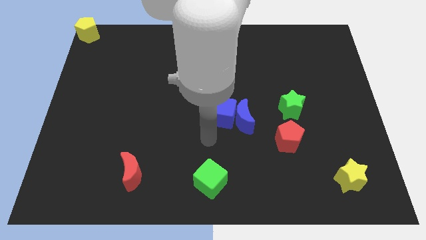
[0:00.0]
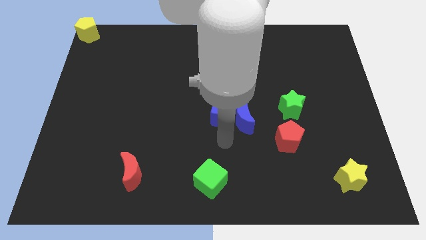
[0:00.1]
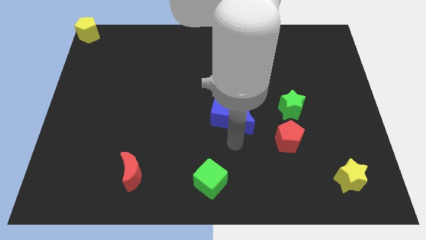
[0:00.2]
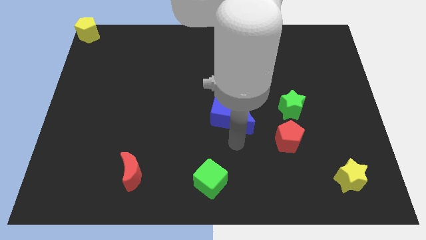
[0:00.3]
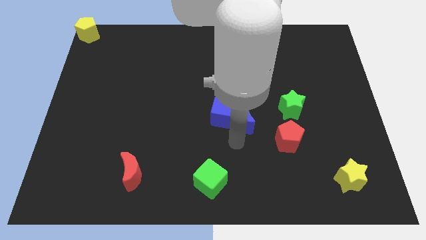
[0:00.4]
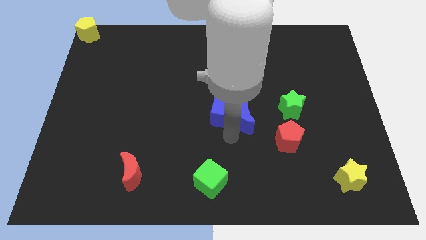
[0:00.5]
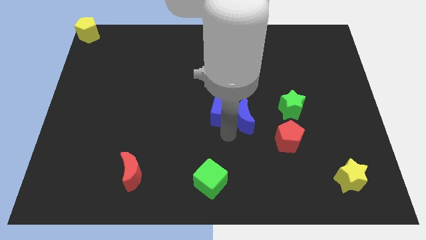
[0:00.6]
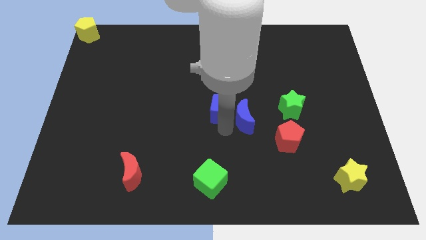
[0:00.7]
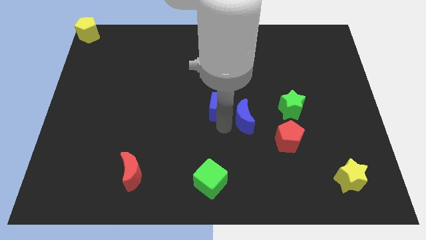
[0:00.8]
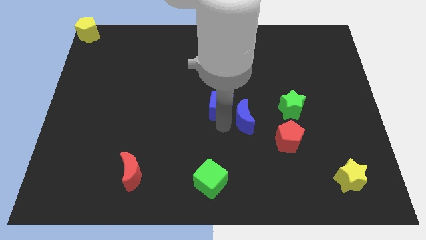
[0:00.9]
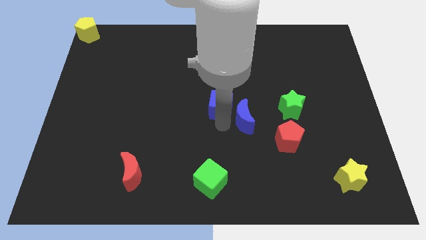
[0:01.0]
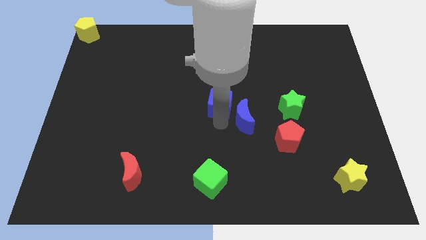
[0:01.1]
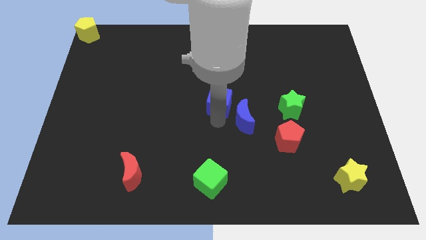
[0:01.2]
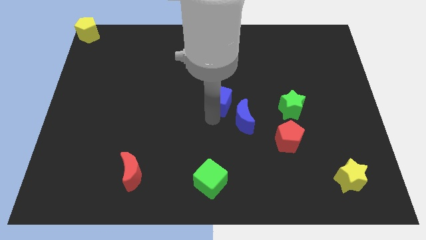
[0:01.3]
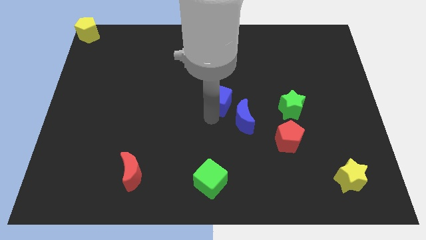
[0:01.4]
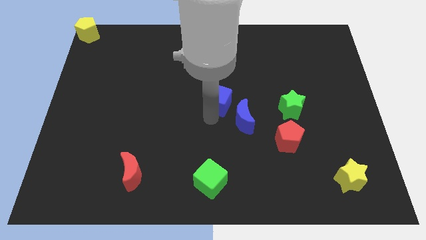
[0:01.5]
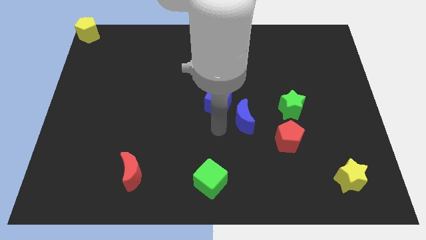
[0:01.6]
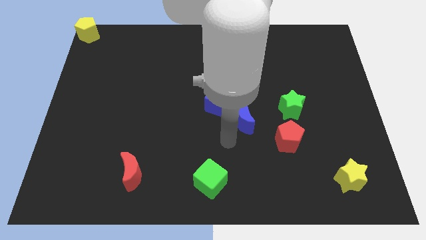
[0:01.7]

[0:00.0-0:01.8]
separate blue cube from the blue moon

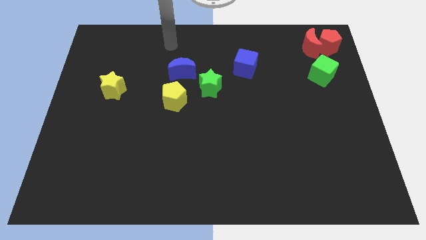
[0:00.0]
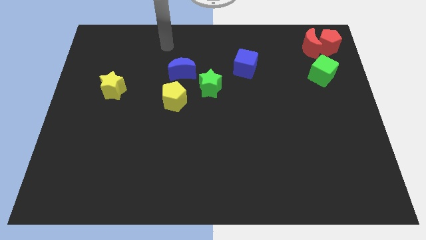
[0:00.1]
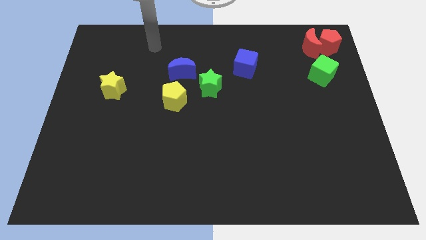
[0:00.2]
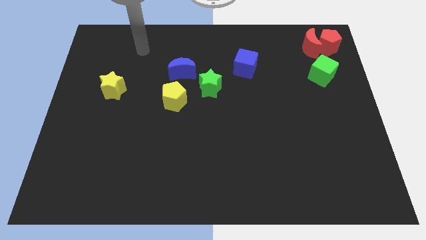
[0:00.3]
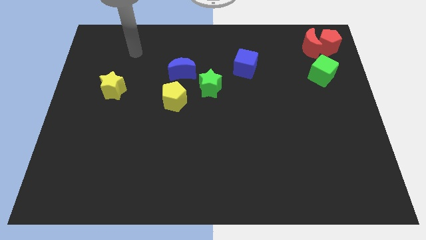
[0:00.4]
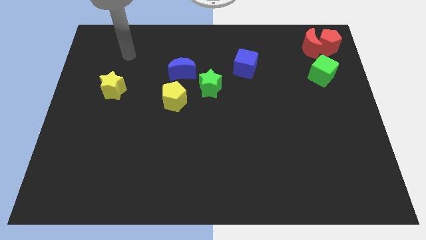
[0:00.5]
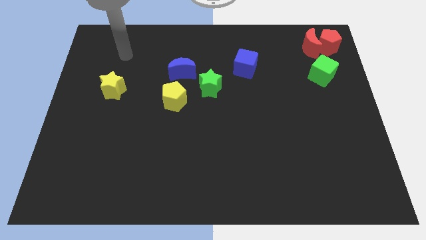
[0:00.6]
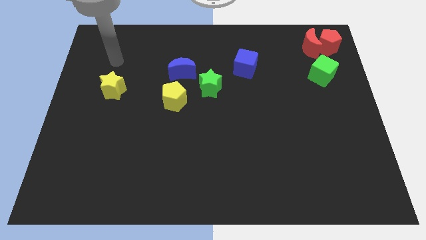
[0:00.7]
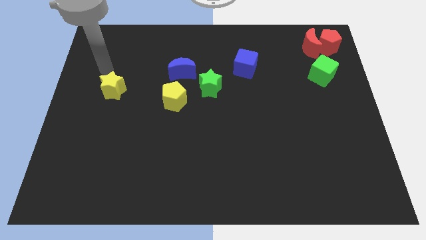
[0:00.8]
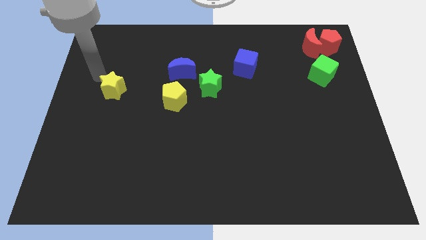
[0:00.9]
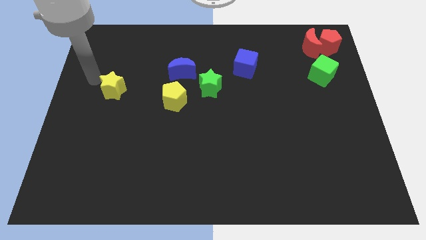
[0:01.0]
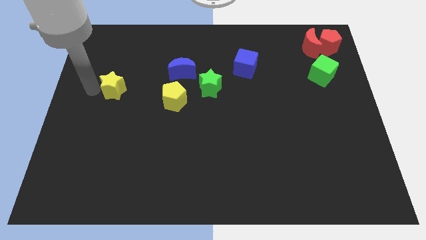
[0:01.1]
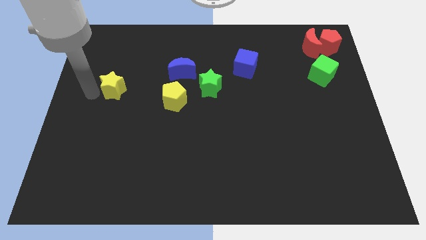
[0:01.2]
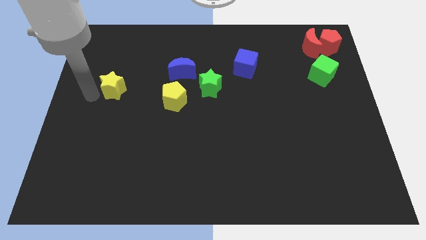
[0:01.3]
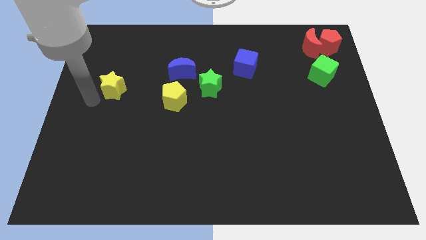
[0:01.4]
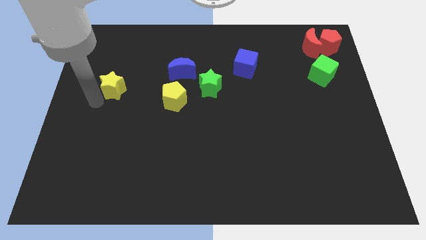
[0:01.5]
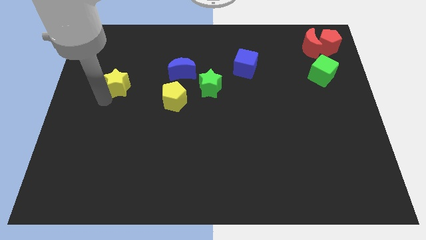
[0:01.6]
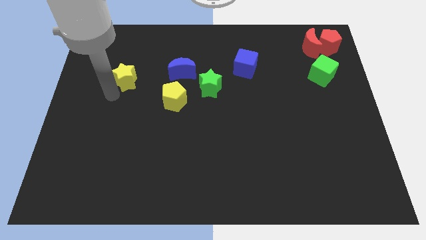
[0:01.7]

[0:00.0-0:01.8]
place your arm below to the yellow star

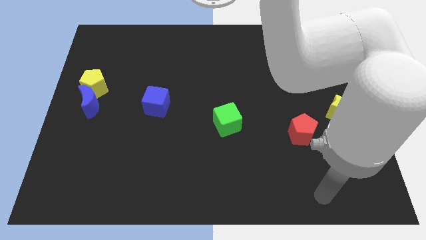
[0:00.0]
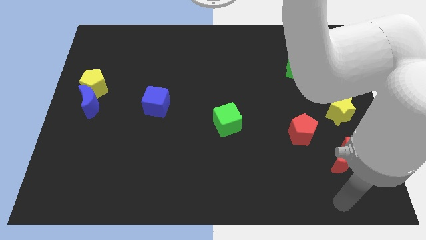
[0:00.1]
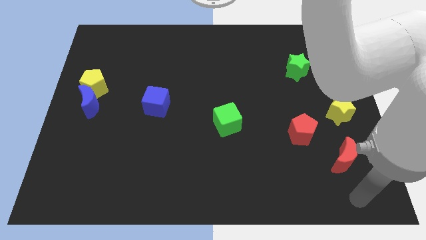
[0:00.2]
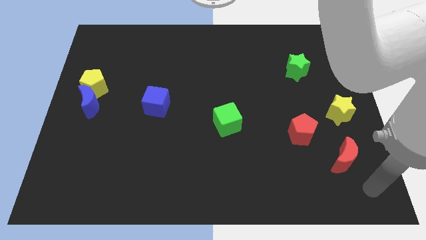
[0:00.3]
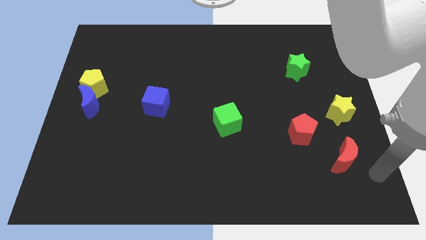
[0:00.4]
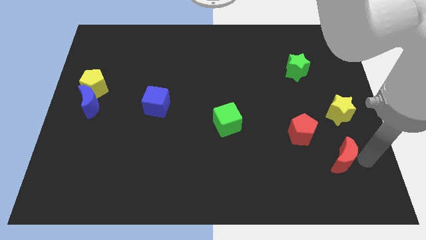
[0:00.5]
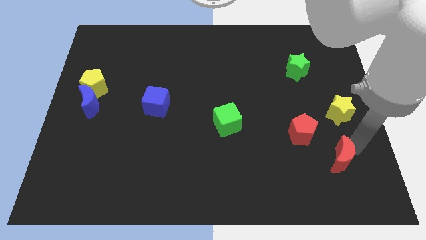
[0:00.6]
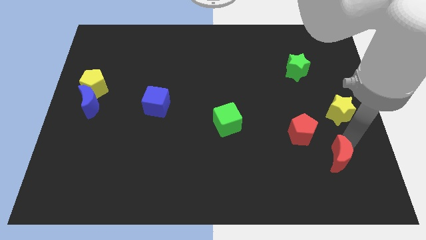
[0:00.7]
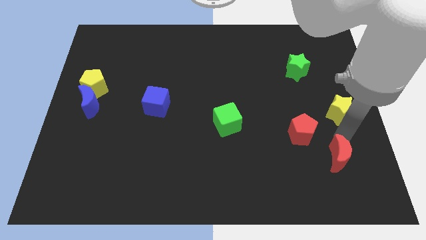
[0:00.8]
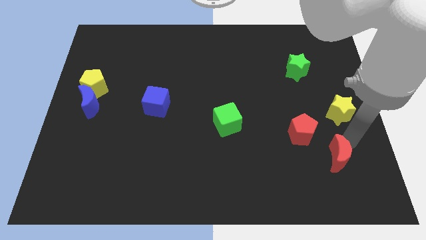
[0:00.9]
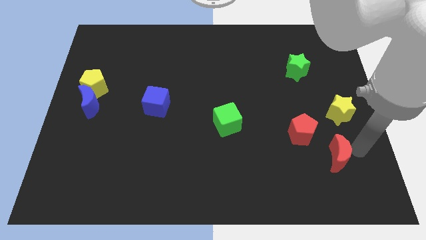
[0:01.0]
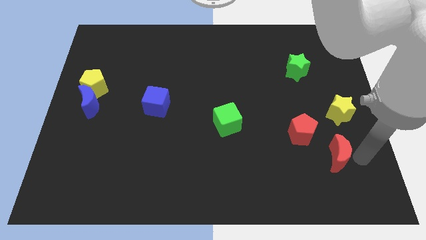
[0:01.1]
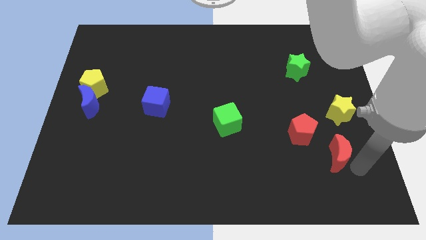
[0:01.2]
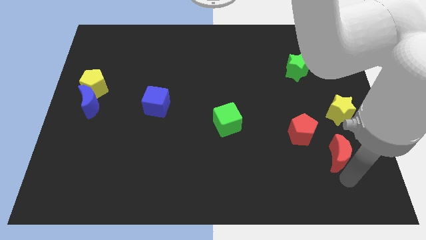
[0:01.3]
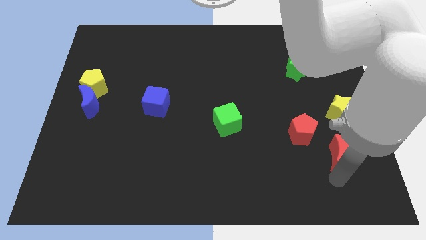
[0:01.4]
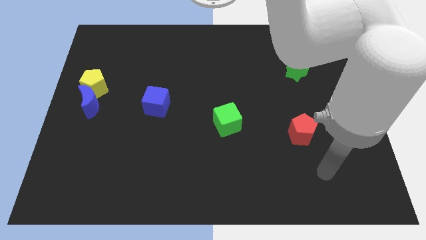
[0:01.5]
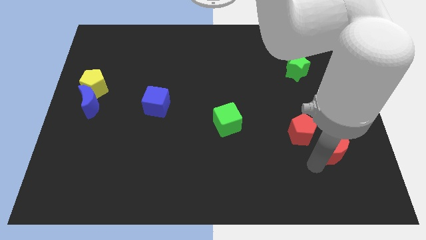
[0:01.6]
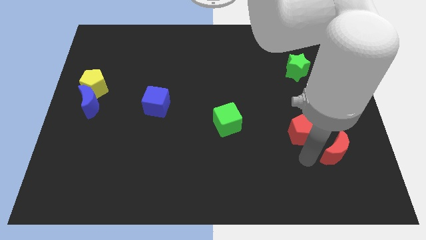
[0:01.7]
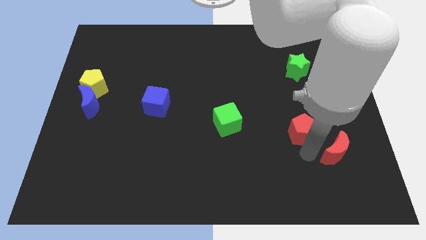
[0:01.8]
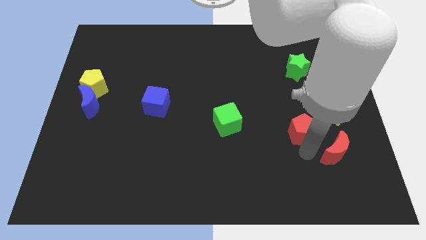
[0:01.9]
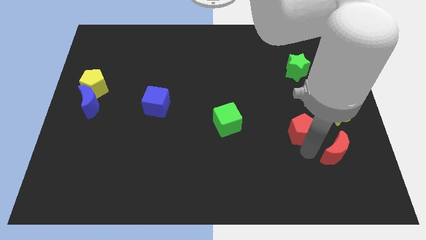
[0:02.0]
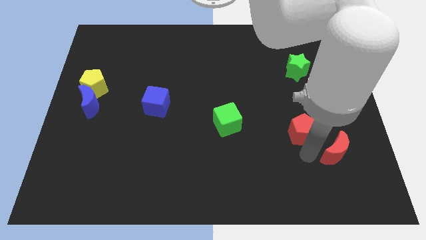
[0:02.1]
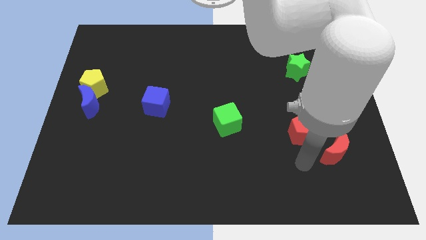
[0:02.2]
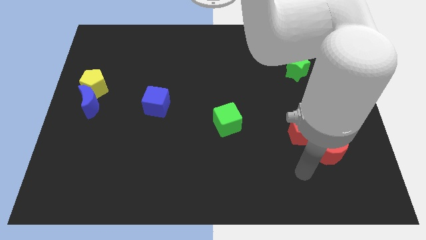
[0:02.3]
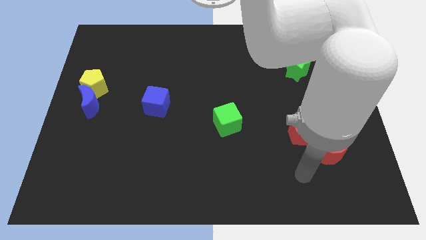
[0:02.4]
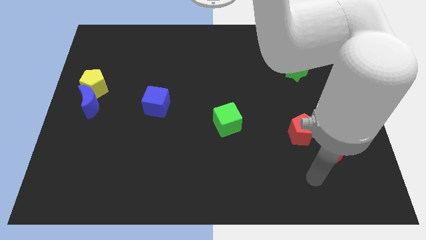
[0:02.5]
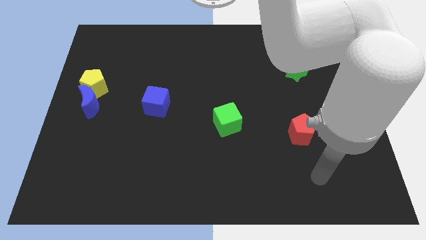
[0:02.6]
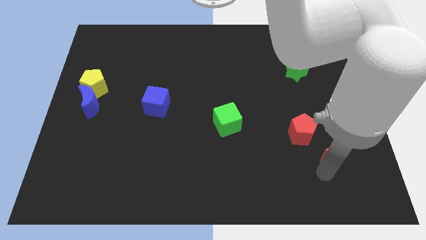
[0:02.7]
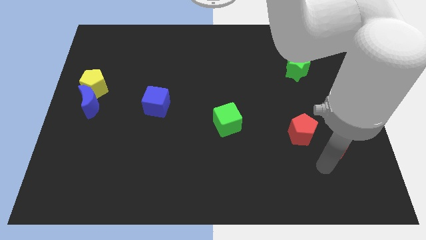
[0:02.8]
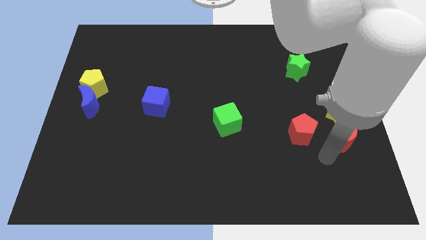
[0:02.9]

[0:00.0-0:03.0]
place the red moon close to the yellow star

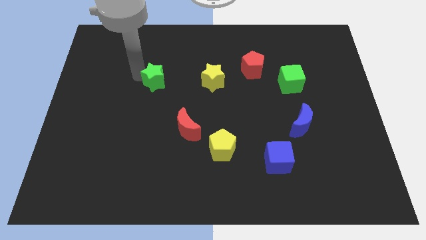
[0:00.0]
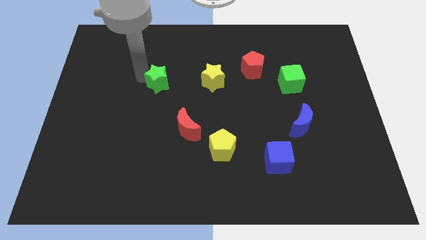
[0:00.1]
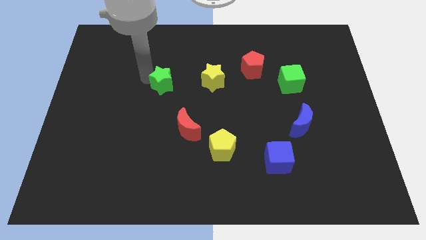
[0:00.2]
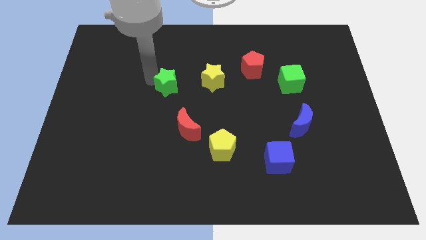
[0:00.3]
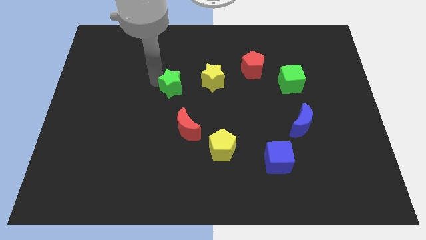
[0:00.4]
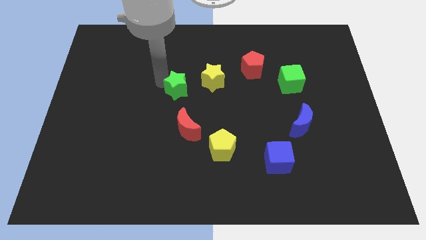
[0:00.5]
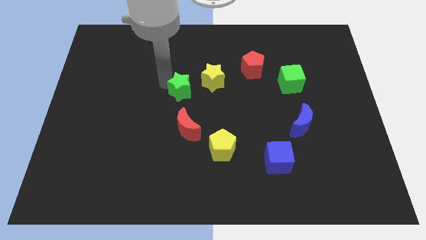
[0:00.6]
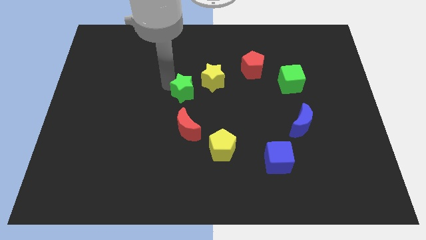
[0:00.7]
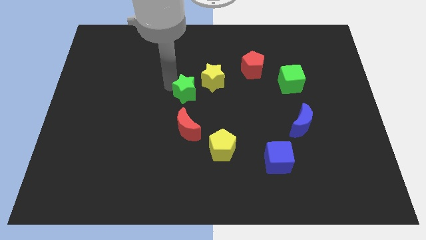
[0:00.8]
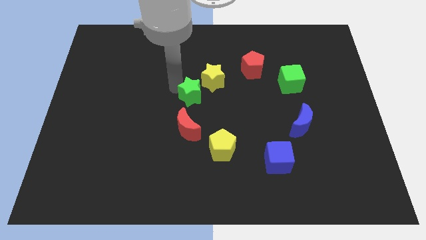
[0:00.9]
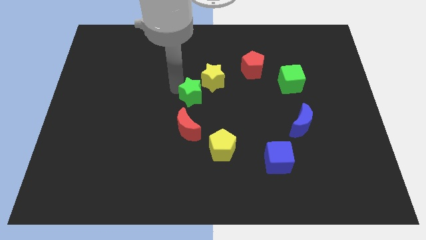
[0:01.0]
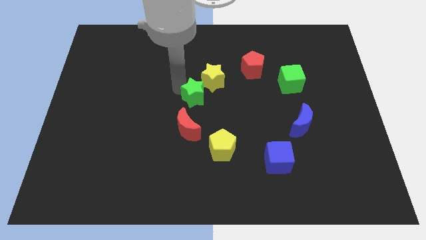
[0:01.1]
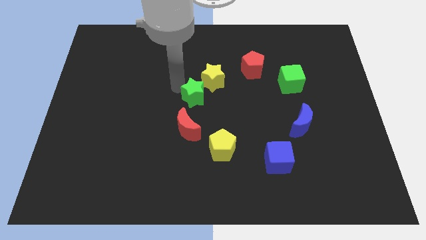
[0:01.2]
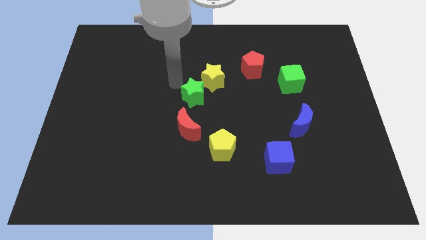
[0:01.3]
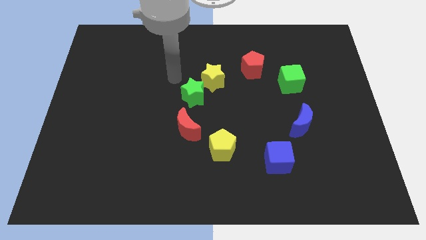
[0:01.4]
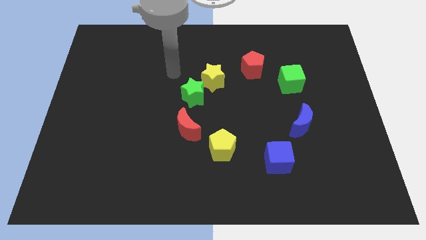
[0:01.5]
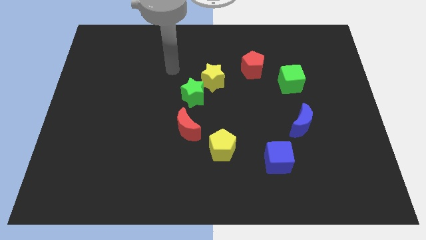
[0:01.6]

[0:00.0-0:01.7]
push the green star to the bottom left diagonal of the yellow star

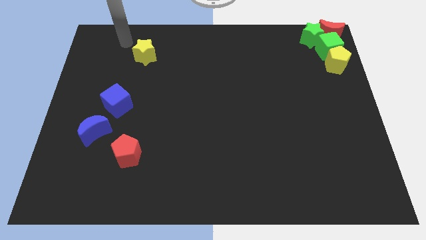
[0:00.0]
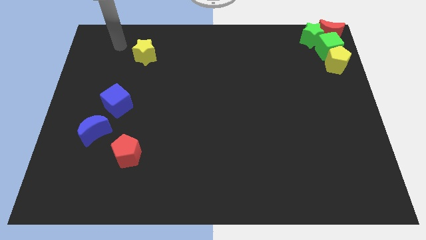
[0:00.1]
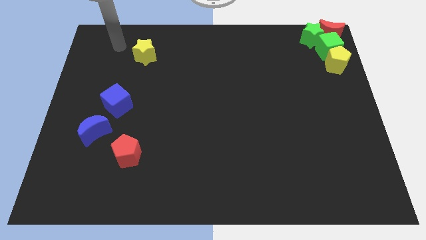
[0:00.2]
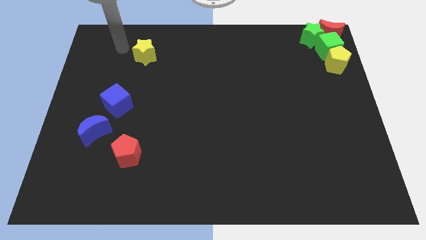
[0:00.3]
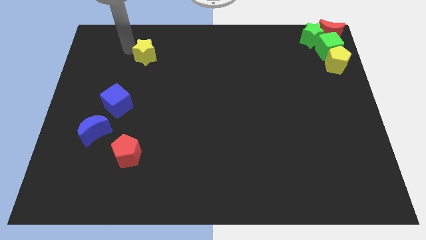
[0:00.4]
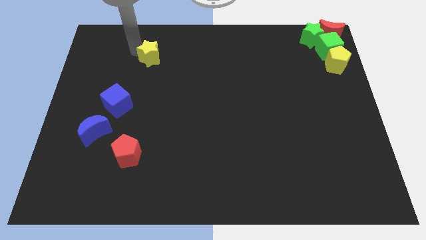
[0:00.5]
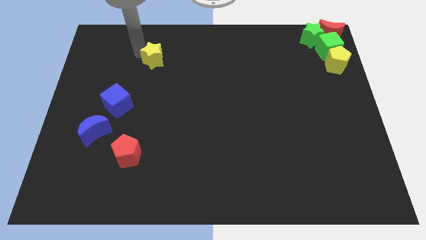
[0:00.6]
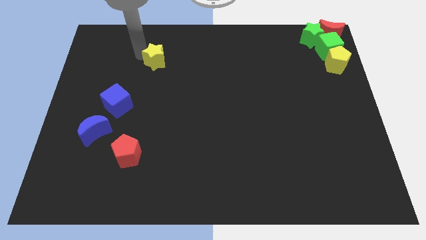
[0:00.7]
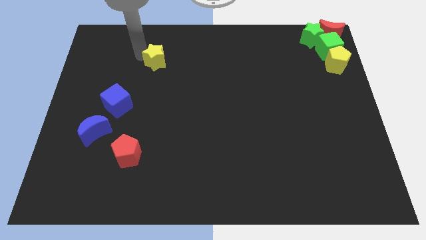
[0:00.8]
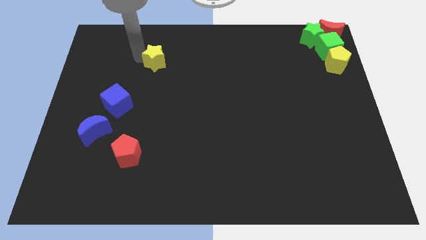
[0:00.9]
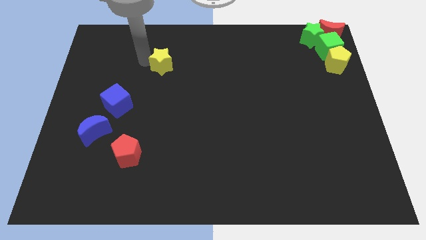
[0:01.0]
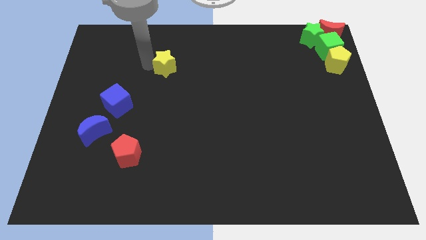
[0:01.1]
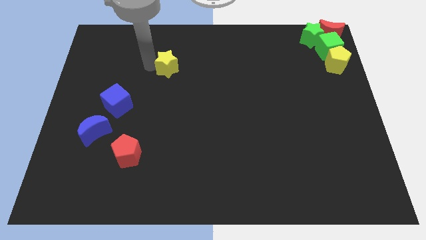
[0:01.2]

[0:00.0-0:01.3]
move the yellow star diagonal to the blue cube
